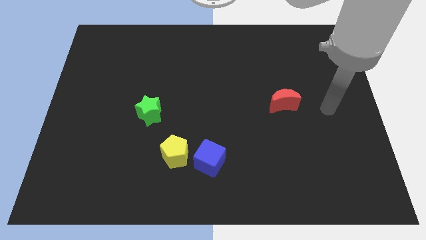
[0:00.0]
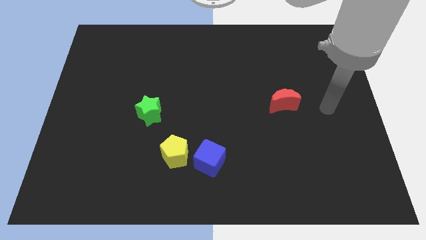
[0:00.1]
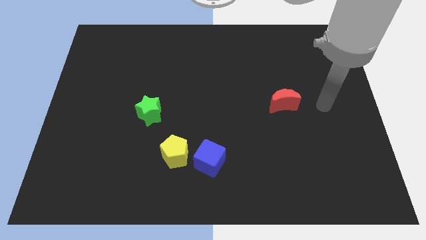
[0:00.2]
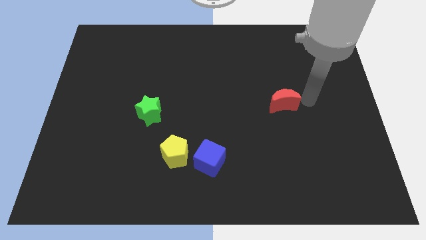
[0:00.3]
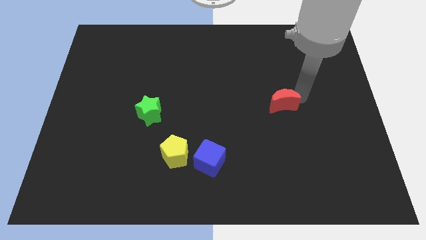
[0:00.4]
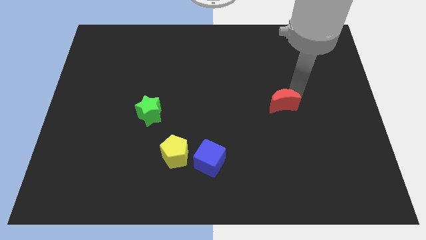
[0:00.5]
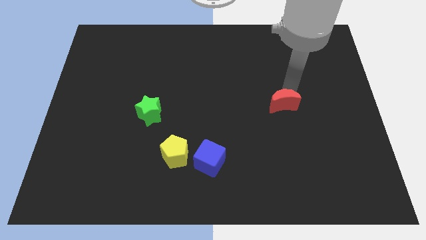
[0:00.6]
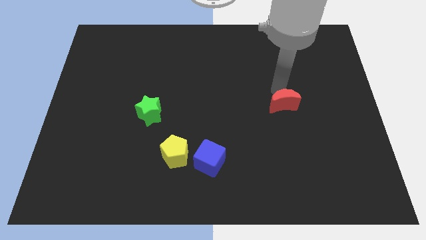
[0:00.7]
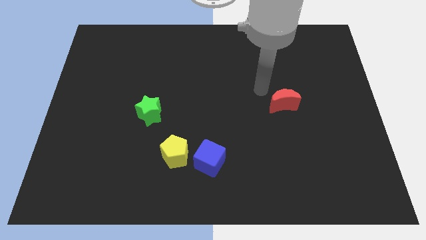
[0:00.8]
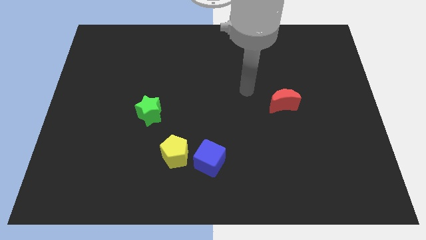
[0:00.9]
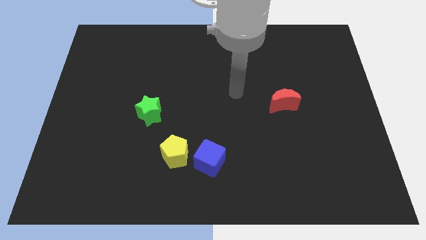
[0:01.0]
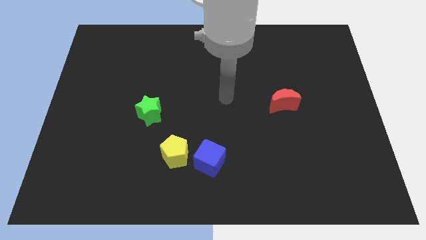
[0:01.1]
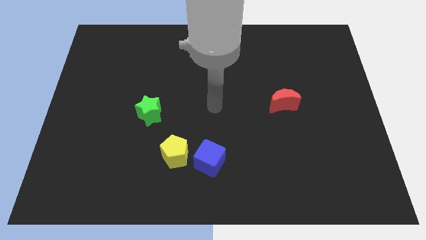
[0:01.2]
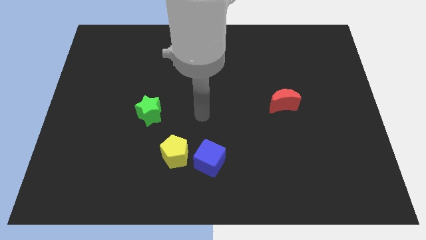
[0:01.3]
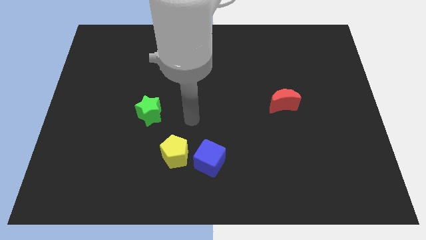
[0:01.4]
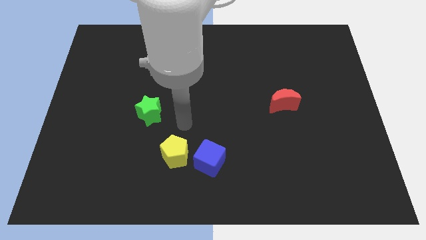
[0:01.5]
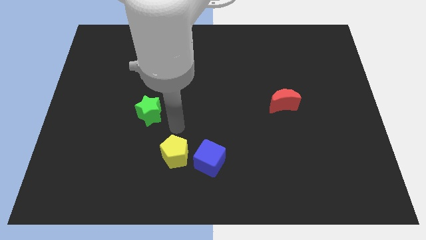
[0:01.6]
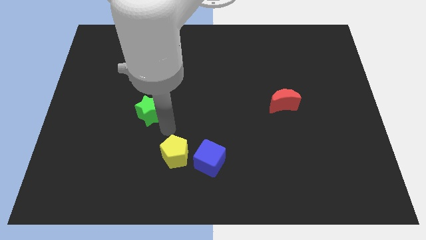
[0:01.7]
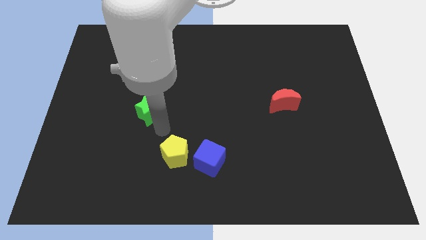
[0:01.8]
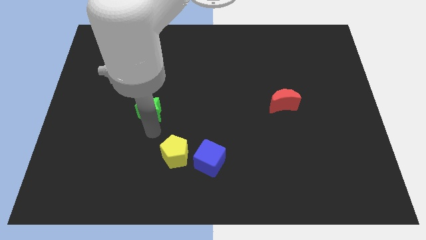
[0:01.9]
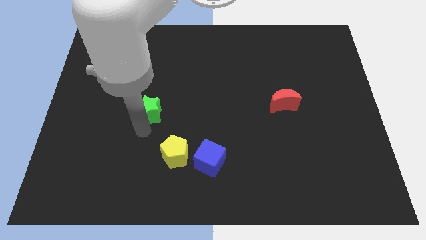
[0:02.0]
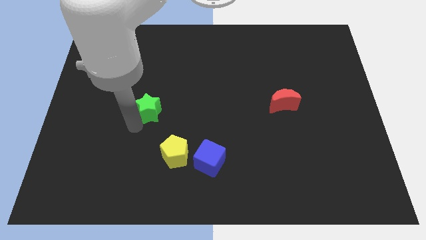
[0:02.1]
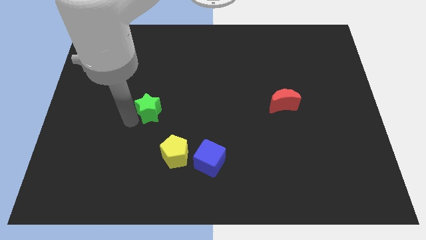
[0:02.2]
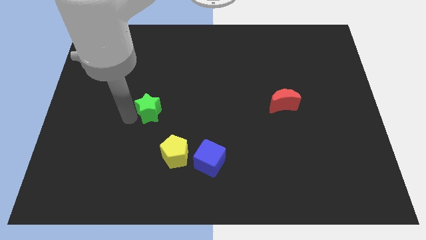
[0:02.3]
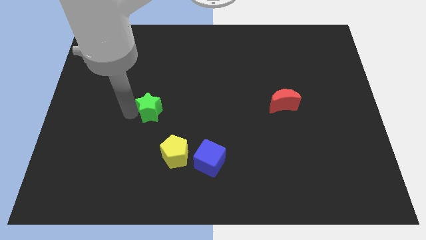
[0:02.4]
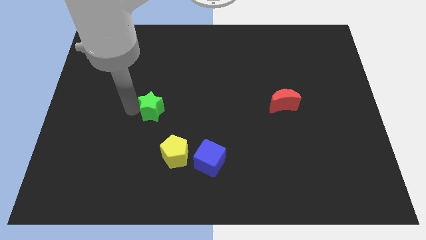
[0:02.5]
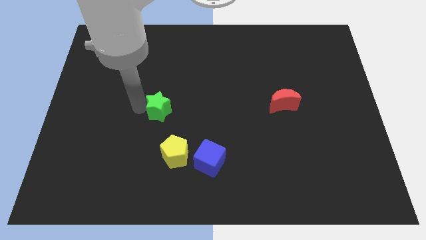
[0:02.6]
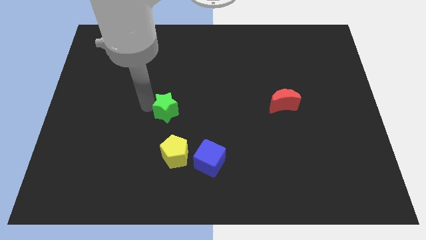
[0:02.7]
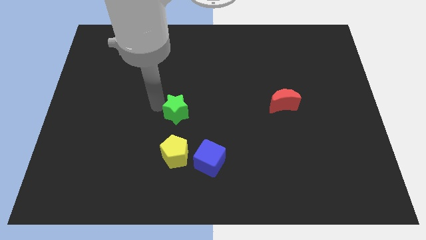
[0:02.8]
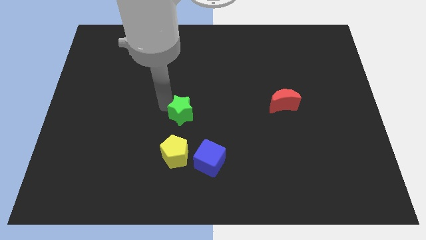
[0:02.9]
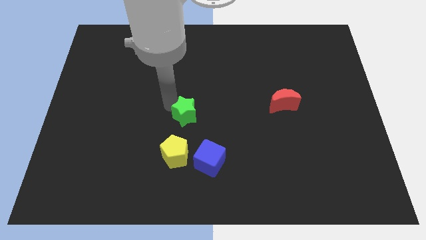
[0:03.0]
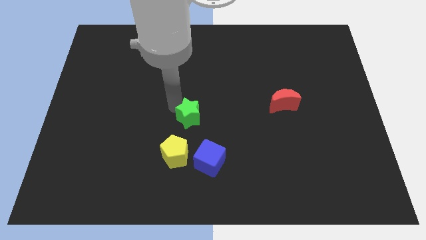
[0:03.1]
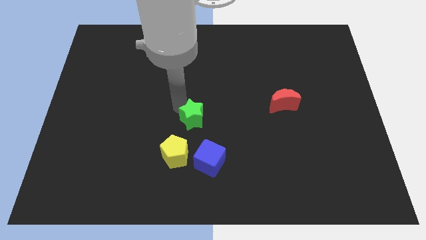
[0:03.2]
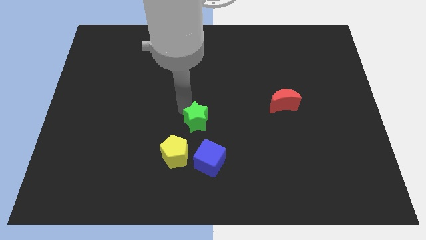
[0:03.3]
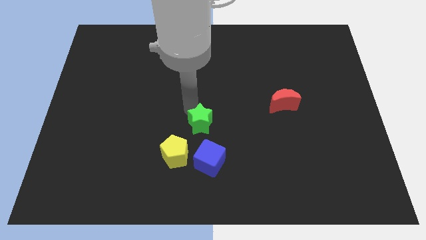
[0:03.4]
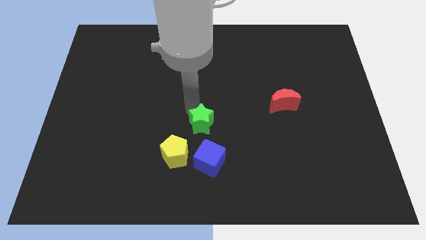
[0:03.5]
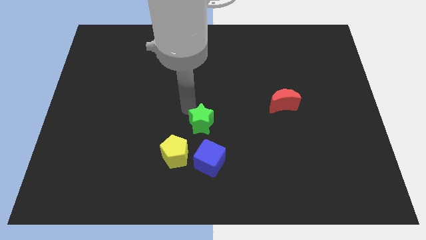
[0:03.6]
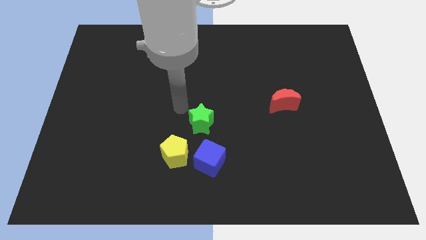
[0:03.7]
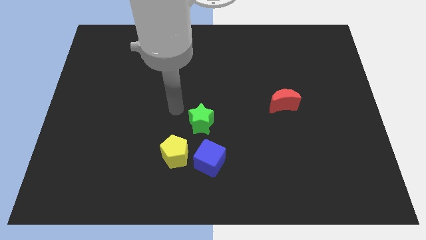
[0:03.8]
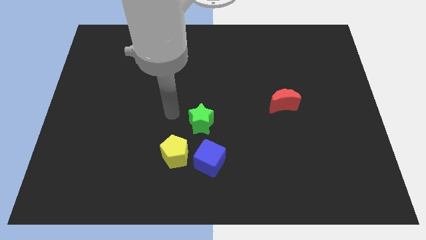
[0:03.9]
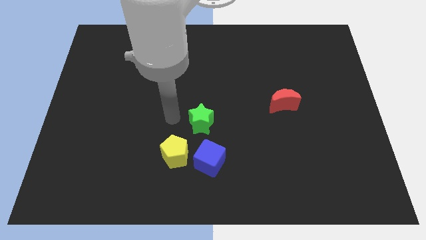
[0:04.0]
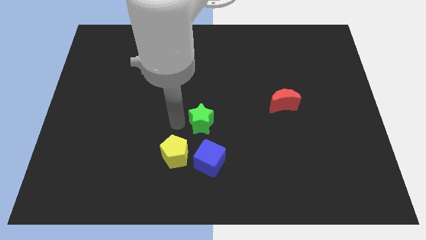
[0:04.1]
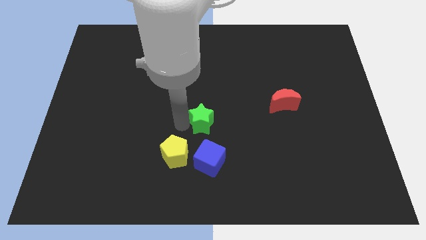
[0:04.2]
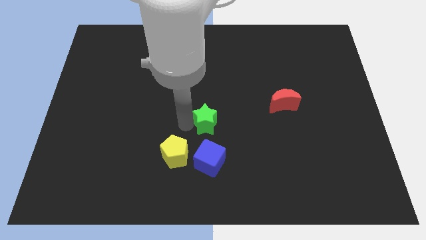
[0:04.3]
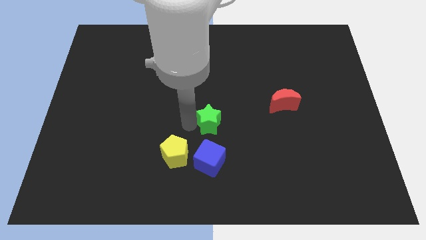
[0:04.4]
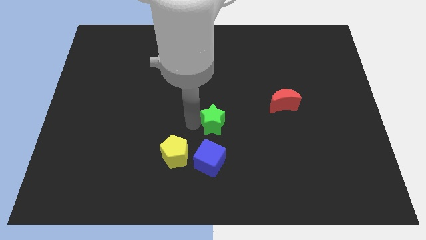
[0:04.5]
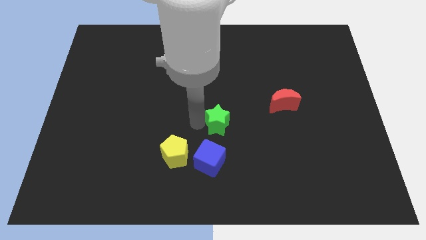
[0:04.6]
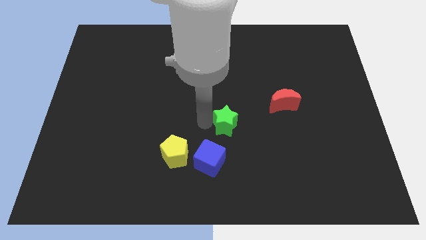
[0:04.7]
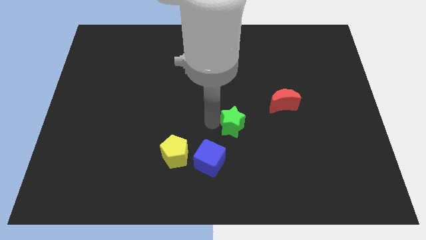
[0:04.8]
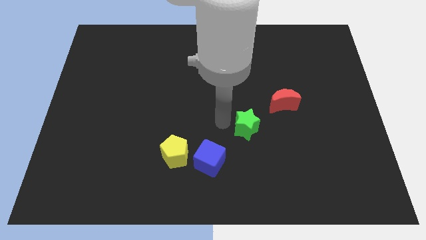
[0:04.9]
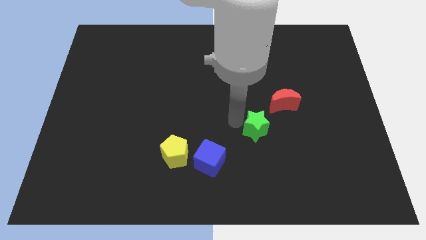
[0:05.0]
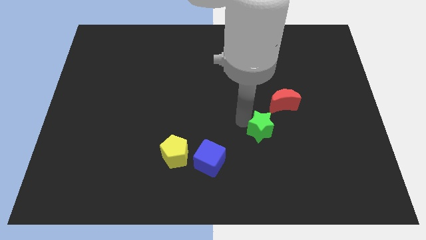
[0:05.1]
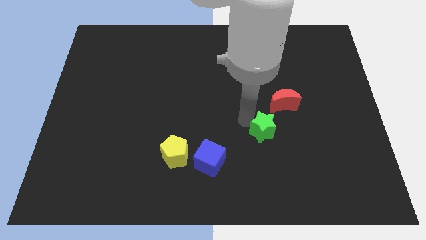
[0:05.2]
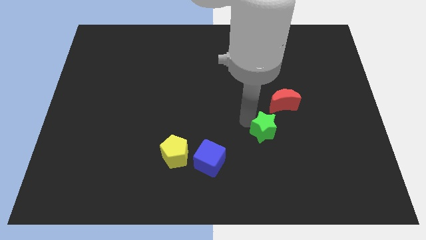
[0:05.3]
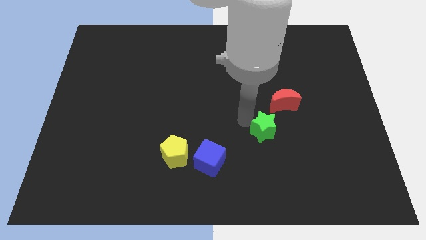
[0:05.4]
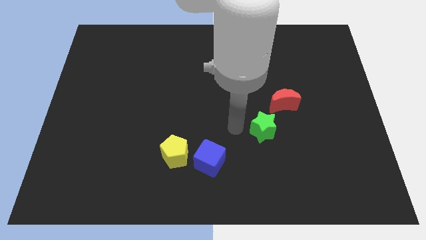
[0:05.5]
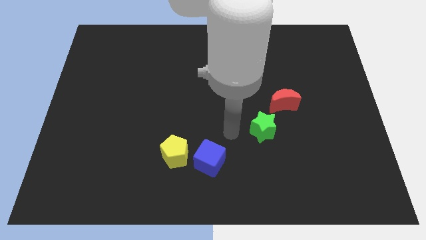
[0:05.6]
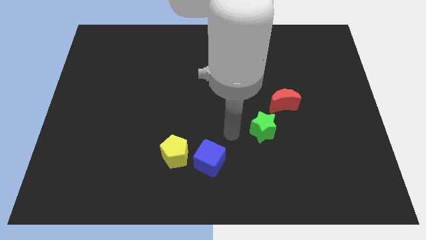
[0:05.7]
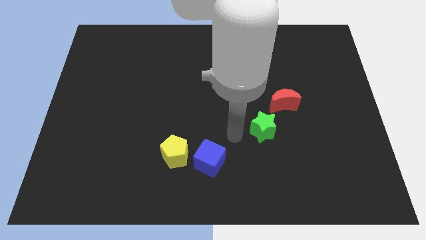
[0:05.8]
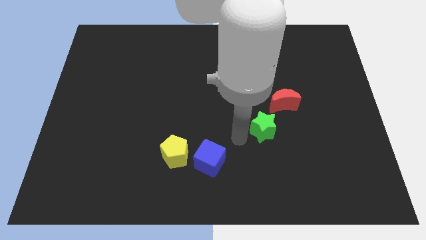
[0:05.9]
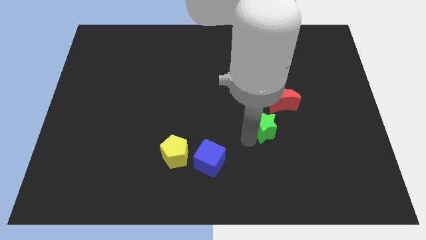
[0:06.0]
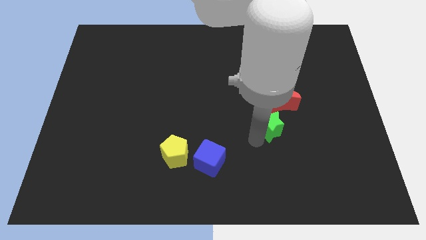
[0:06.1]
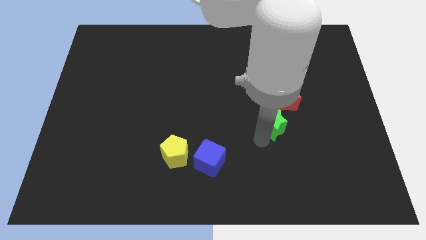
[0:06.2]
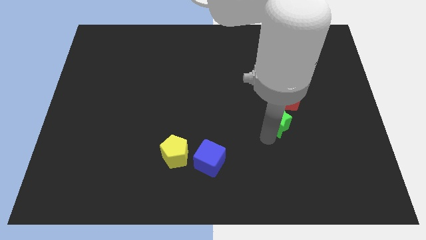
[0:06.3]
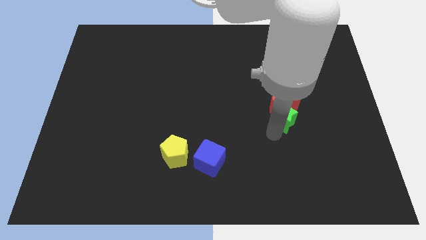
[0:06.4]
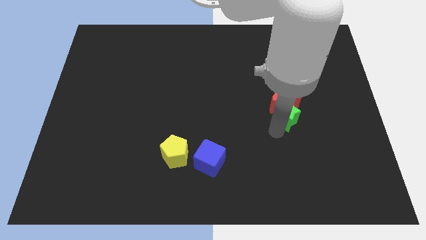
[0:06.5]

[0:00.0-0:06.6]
slide the green block next to the red block

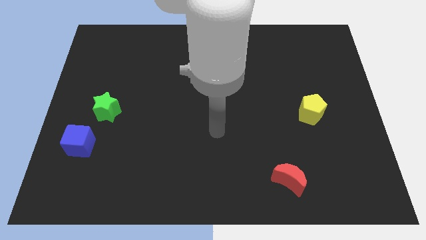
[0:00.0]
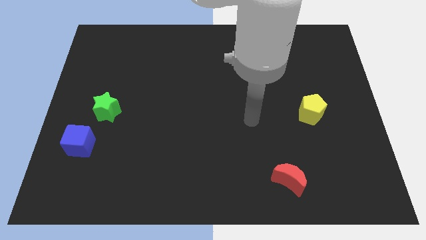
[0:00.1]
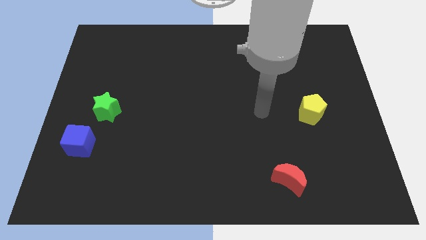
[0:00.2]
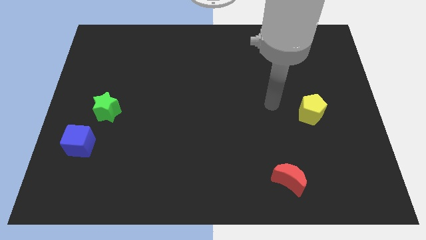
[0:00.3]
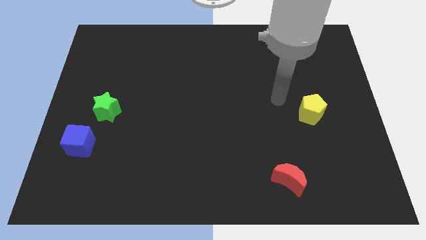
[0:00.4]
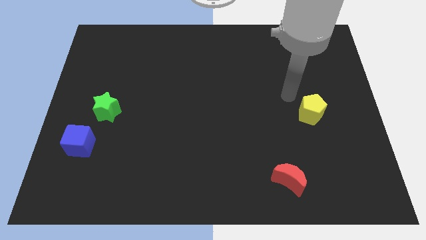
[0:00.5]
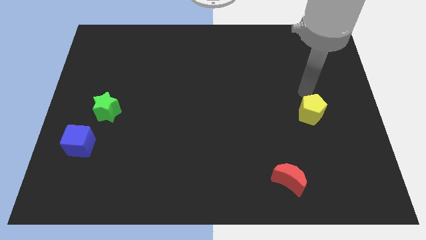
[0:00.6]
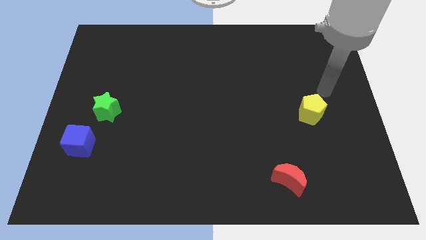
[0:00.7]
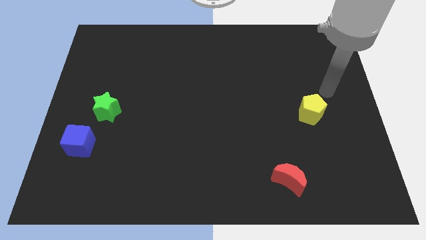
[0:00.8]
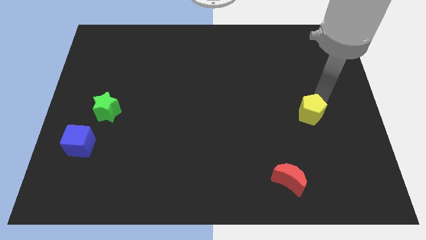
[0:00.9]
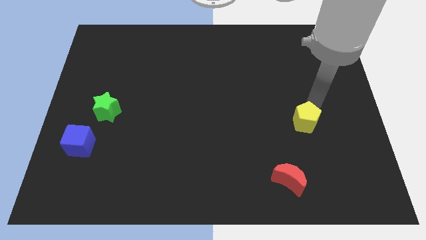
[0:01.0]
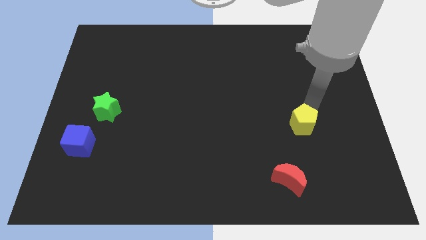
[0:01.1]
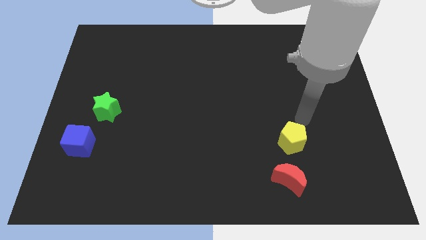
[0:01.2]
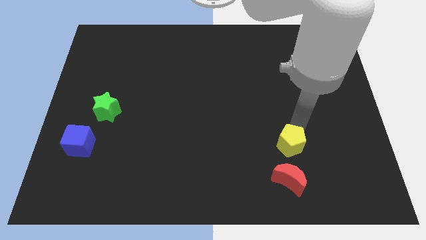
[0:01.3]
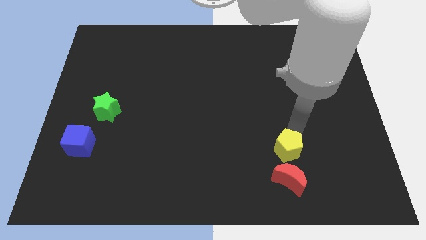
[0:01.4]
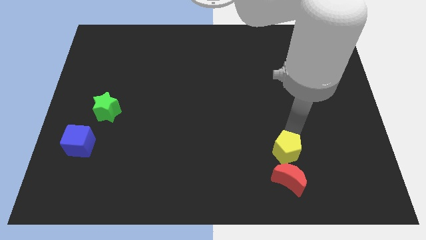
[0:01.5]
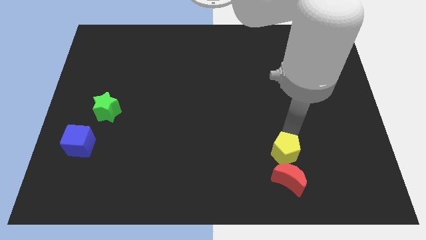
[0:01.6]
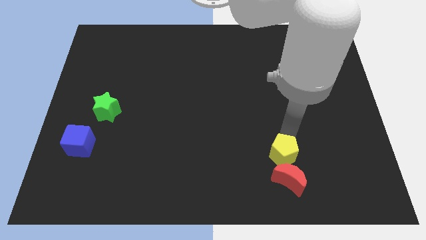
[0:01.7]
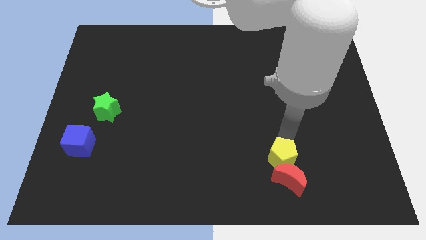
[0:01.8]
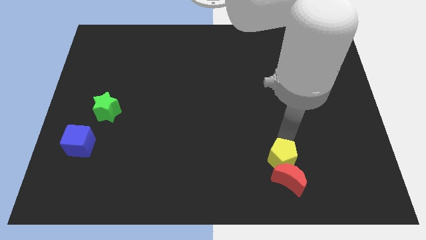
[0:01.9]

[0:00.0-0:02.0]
put the yellow block next to the red moon
